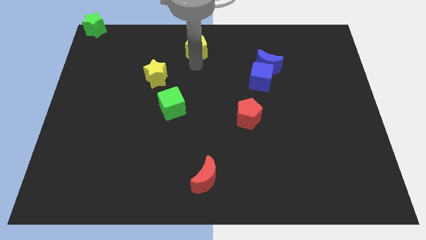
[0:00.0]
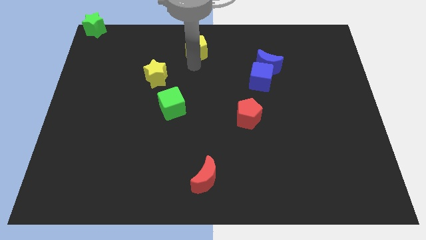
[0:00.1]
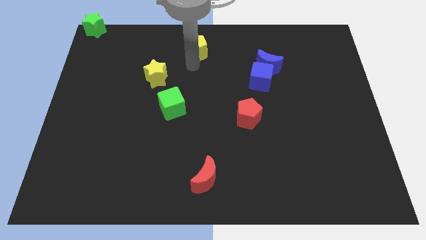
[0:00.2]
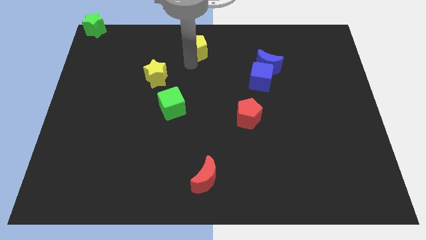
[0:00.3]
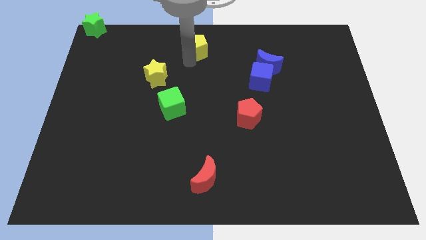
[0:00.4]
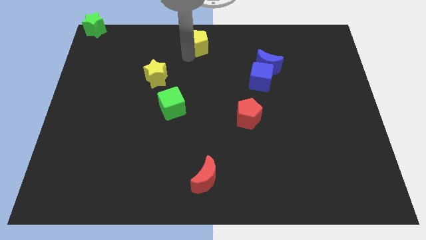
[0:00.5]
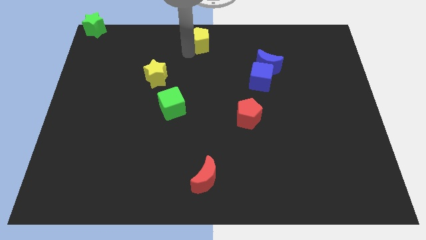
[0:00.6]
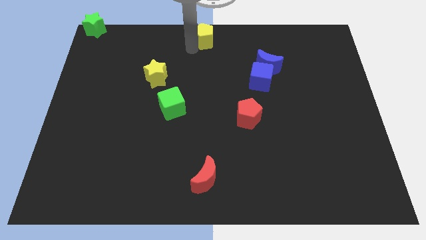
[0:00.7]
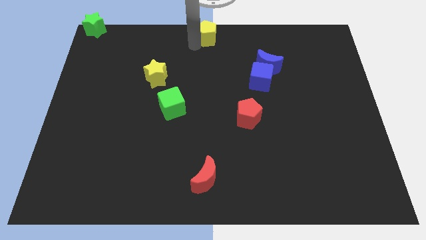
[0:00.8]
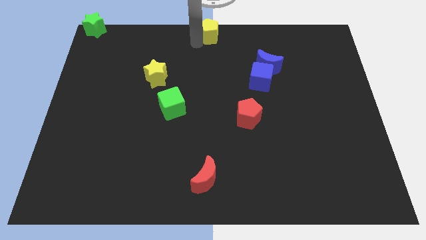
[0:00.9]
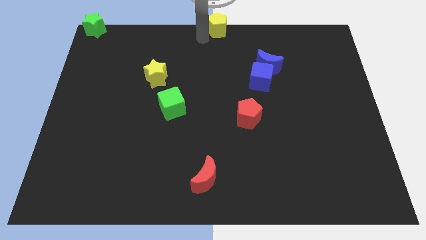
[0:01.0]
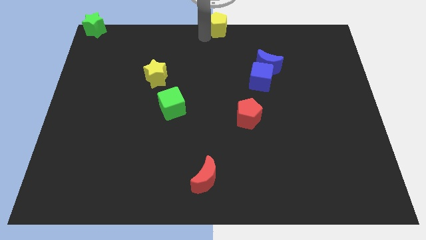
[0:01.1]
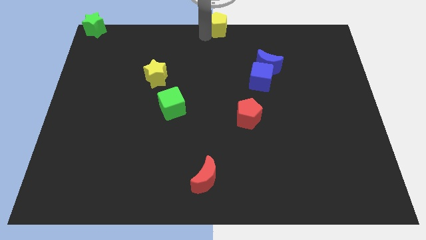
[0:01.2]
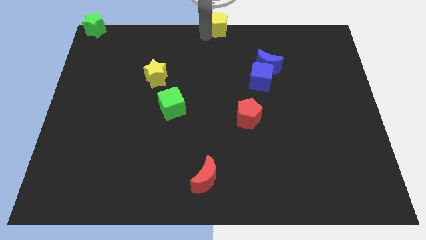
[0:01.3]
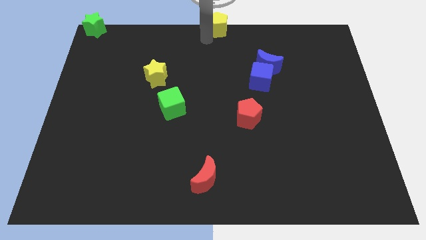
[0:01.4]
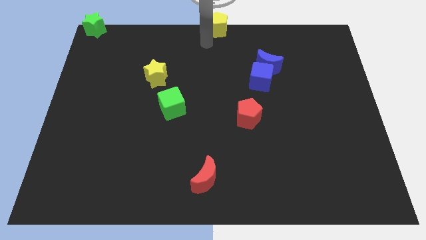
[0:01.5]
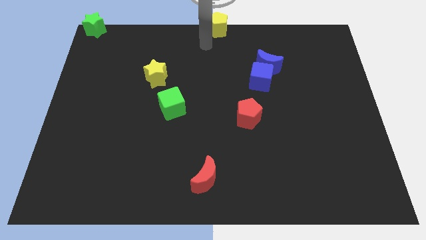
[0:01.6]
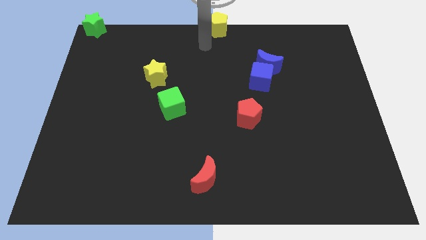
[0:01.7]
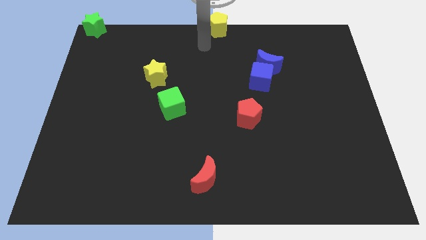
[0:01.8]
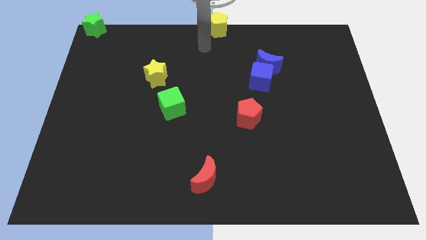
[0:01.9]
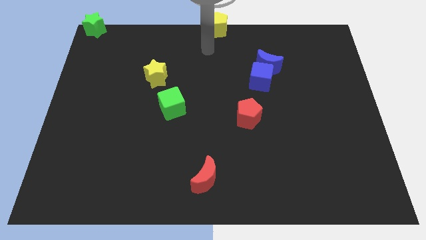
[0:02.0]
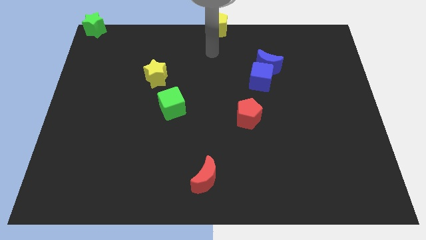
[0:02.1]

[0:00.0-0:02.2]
place the yellow pentagon at the top center of the board

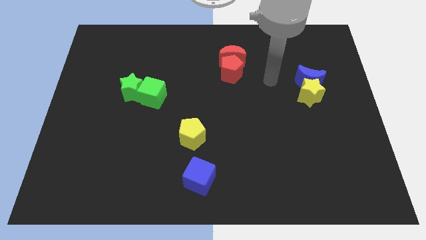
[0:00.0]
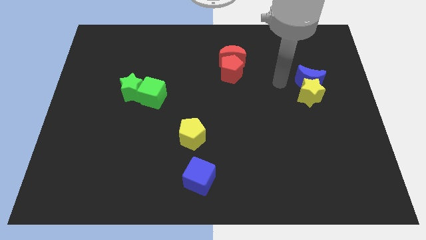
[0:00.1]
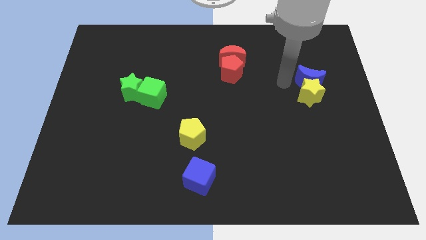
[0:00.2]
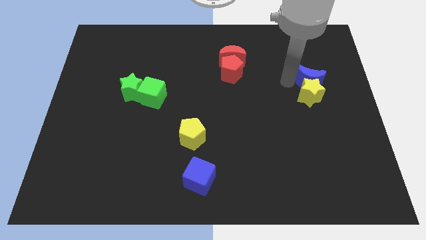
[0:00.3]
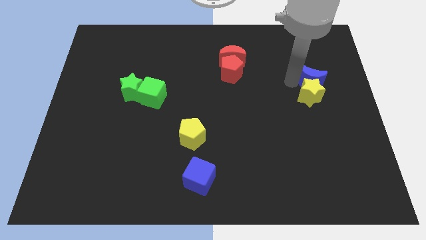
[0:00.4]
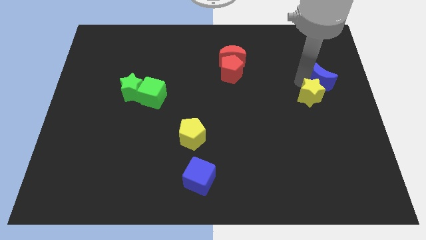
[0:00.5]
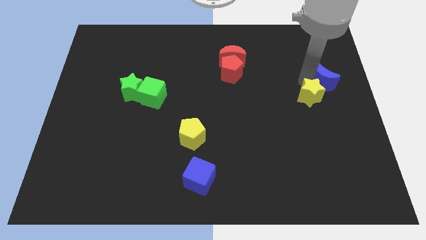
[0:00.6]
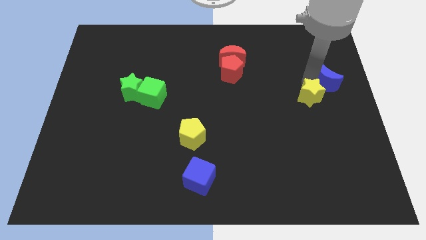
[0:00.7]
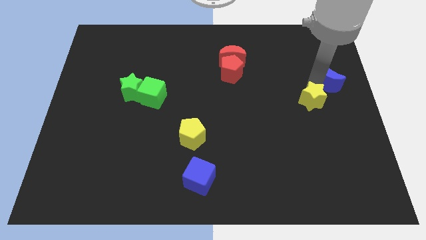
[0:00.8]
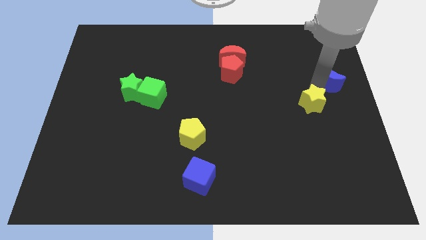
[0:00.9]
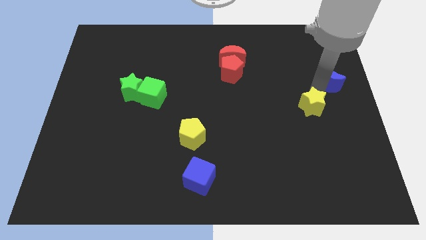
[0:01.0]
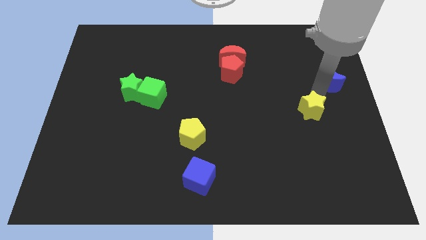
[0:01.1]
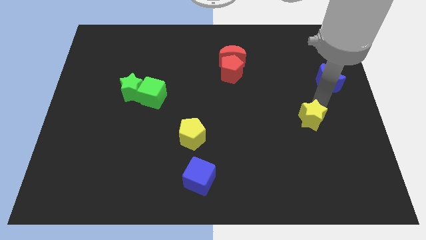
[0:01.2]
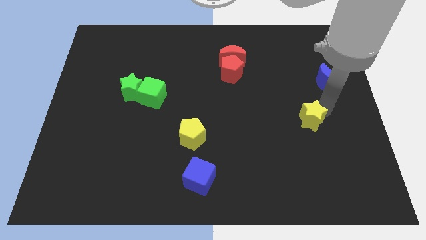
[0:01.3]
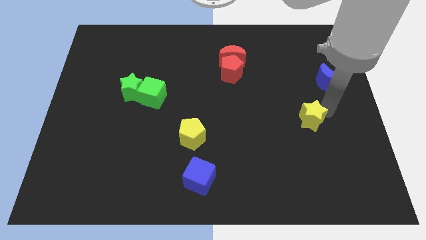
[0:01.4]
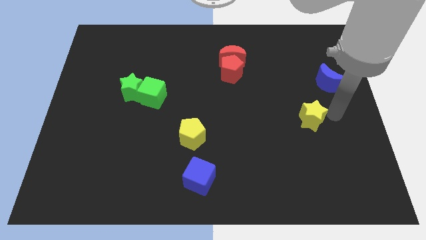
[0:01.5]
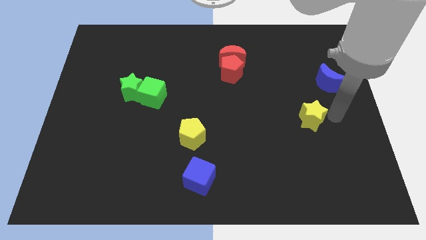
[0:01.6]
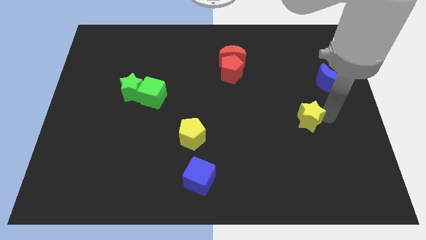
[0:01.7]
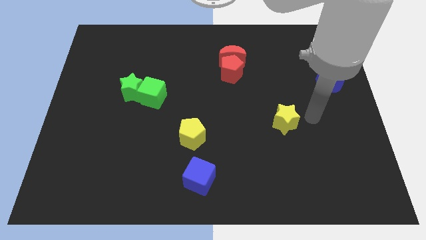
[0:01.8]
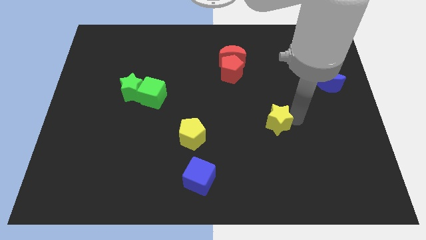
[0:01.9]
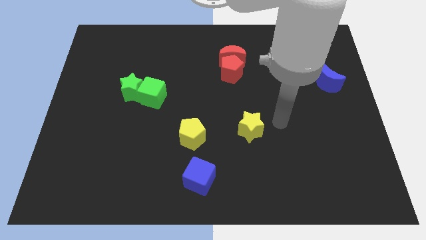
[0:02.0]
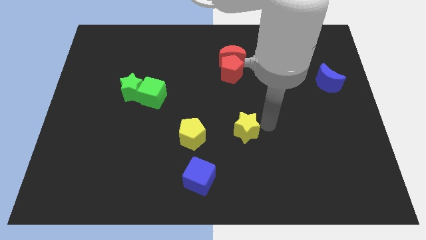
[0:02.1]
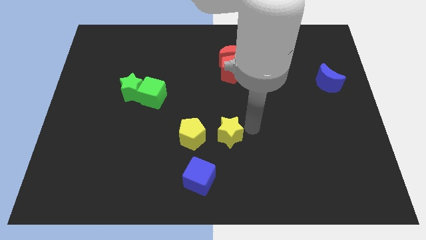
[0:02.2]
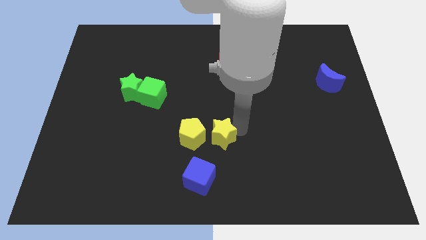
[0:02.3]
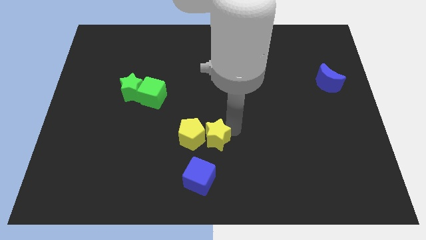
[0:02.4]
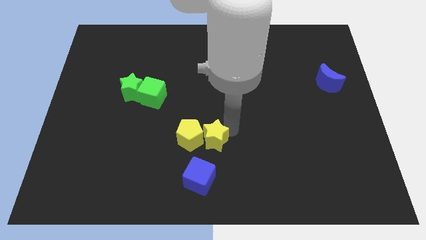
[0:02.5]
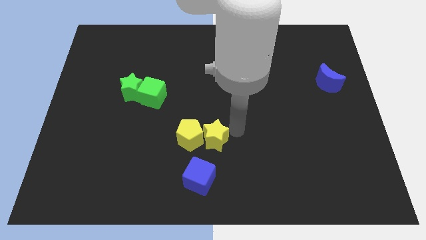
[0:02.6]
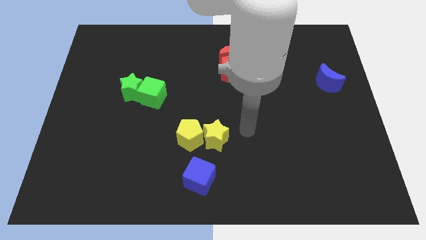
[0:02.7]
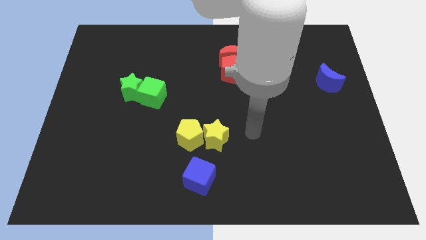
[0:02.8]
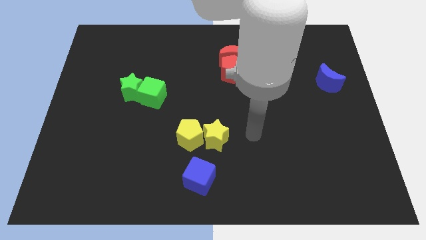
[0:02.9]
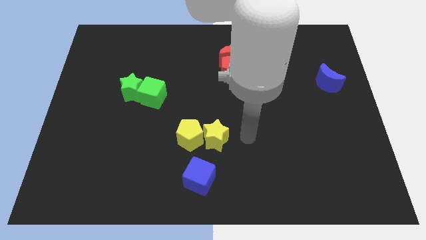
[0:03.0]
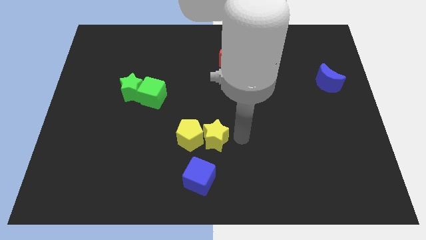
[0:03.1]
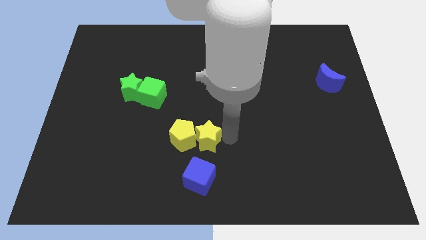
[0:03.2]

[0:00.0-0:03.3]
push the yellow star to the right side of the yellow pentagon

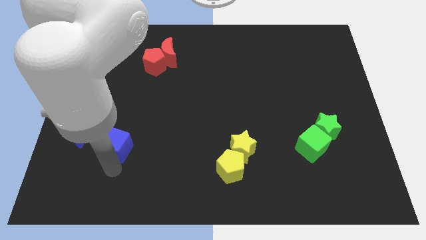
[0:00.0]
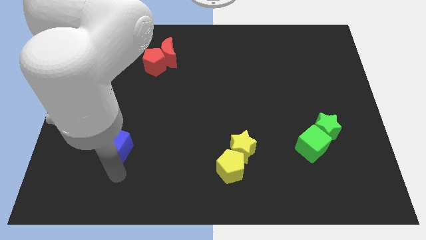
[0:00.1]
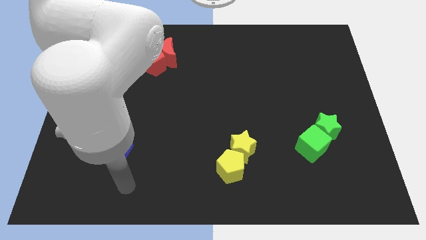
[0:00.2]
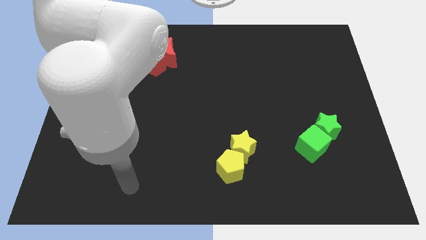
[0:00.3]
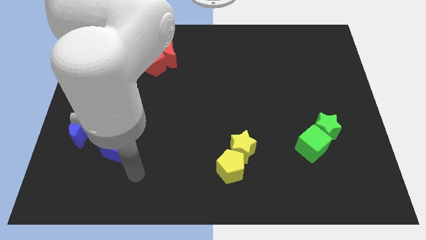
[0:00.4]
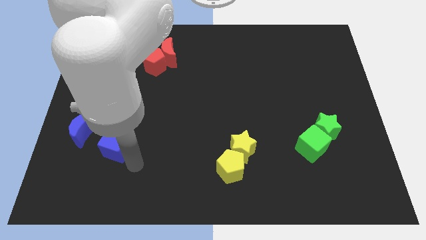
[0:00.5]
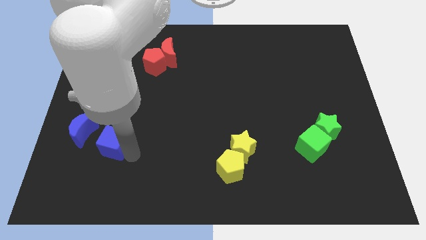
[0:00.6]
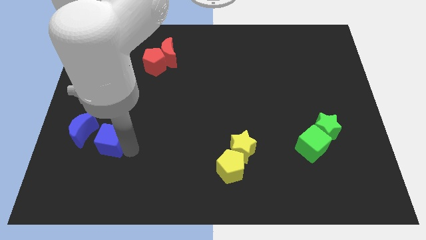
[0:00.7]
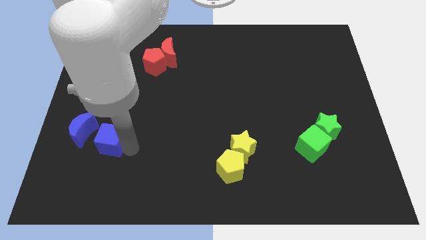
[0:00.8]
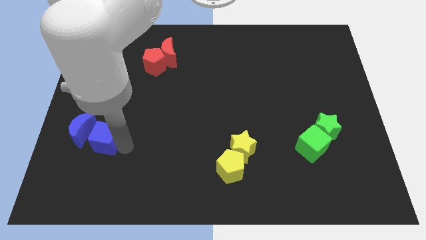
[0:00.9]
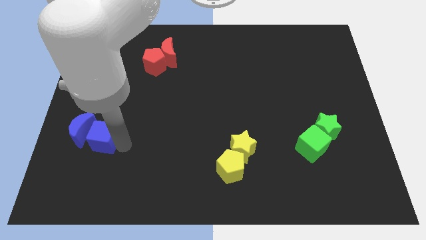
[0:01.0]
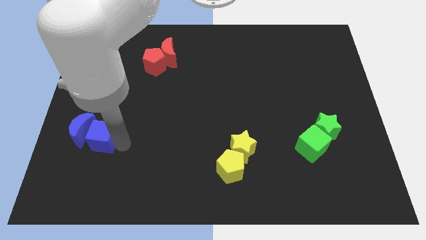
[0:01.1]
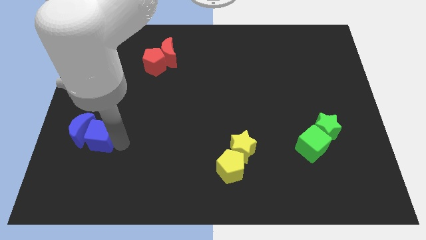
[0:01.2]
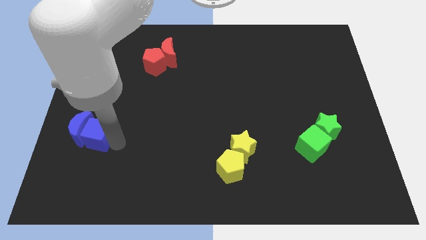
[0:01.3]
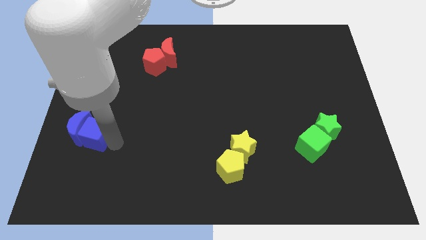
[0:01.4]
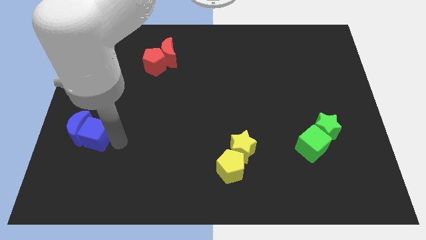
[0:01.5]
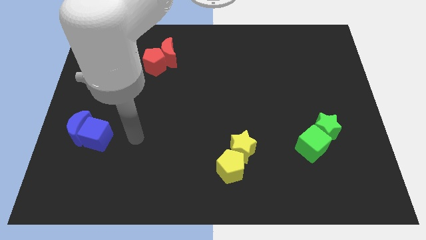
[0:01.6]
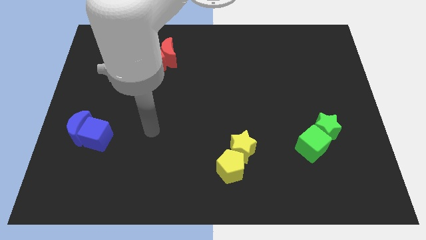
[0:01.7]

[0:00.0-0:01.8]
move blue cube to the right side of the blue moon

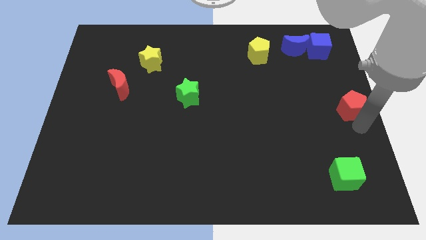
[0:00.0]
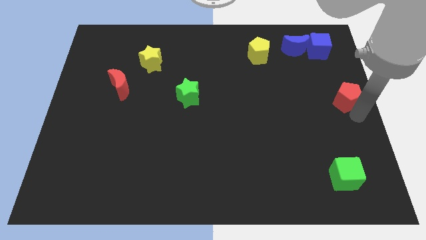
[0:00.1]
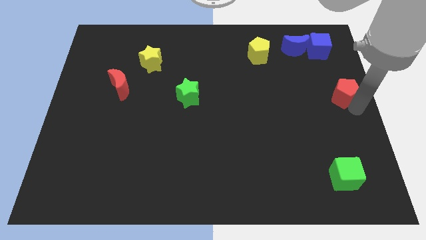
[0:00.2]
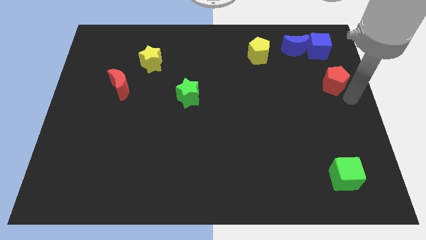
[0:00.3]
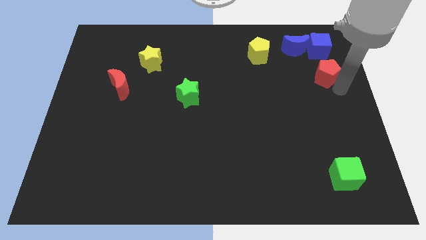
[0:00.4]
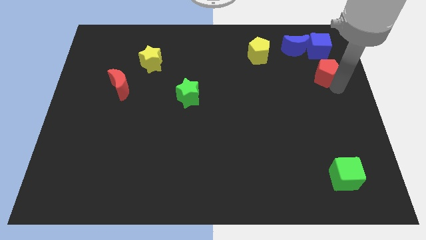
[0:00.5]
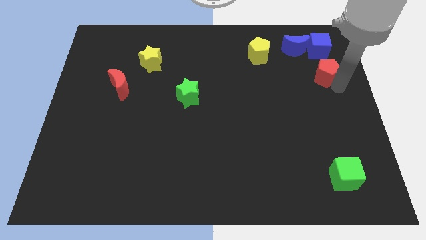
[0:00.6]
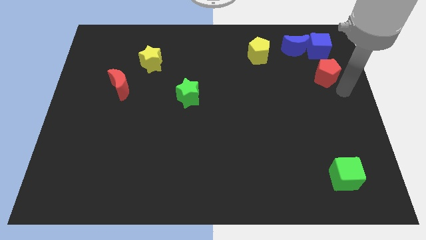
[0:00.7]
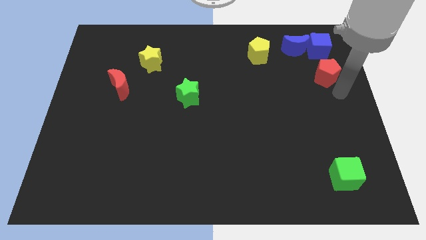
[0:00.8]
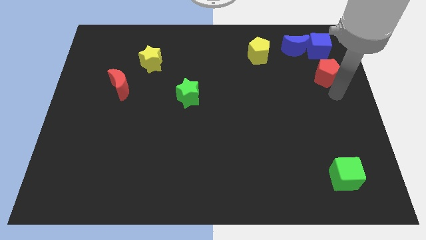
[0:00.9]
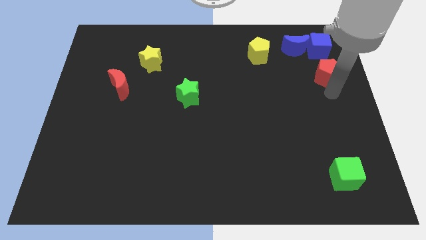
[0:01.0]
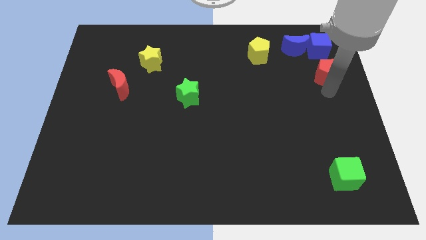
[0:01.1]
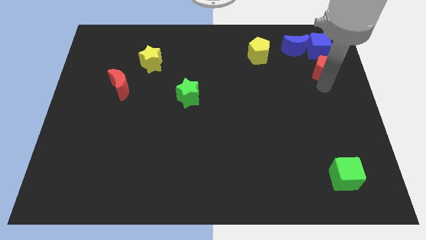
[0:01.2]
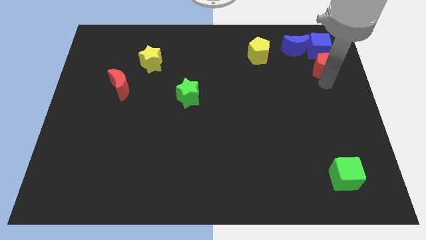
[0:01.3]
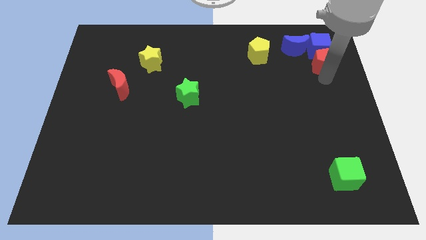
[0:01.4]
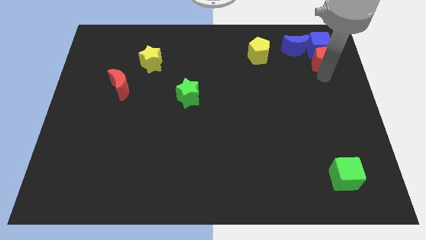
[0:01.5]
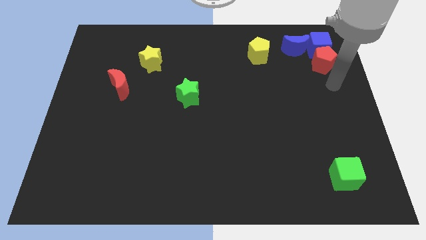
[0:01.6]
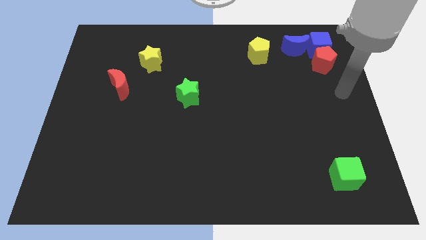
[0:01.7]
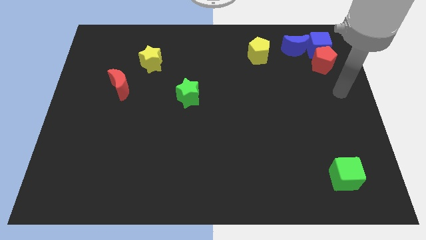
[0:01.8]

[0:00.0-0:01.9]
move the red pentagon into the blue cube
